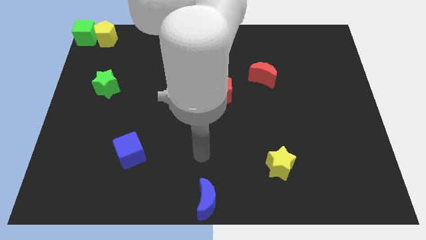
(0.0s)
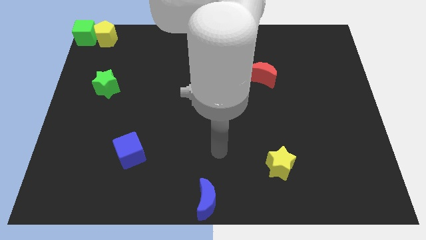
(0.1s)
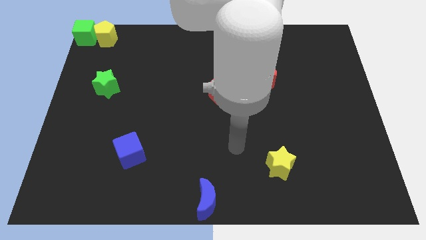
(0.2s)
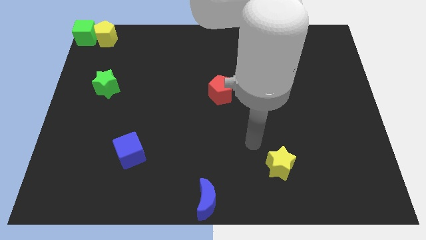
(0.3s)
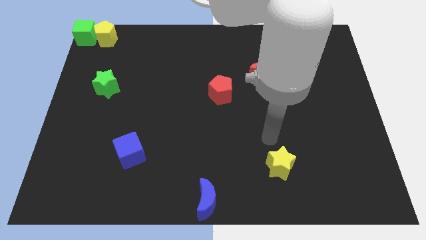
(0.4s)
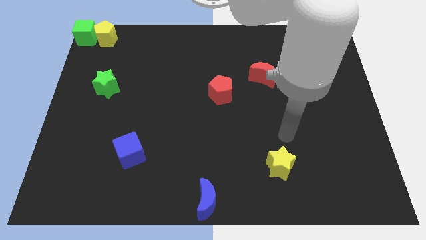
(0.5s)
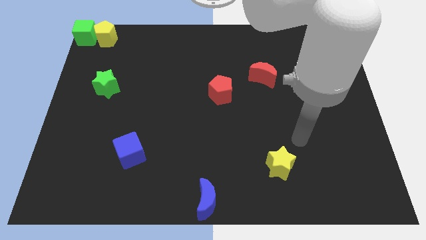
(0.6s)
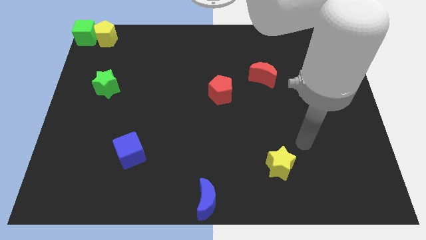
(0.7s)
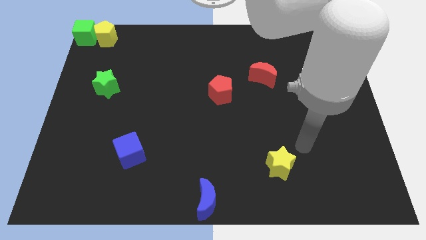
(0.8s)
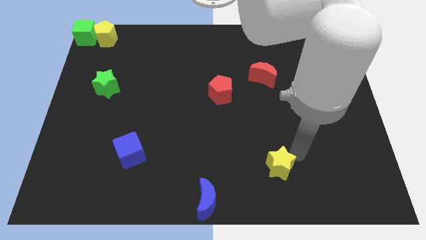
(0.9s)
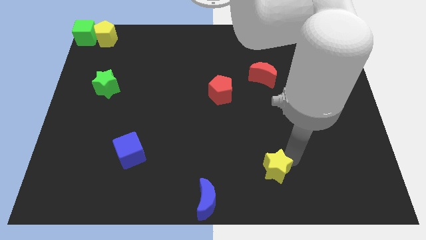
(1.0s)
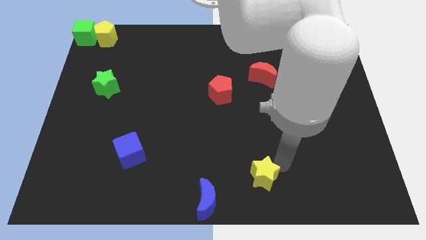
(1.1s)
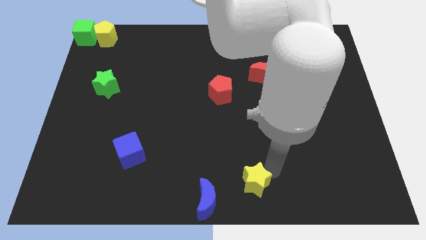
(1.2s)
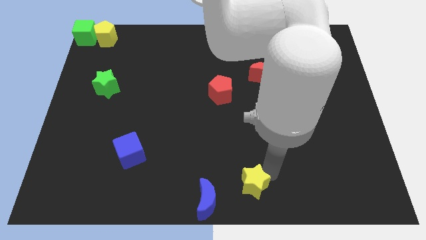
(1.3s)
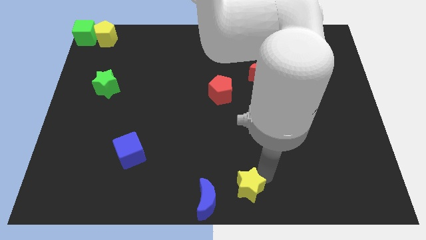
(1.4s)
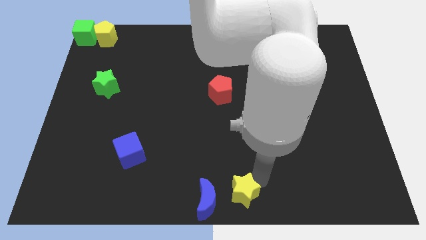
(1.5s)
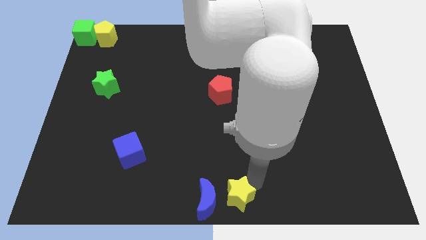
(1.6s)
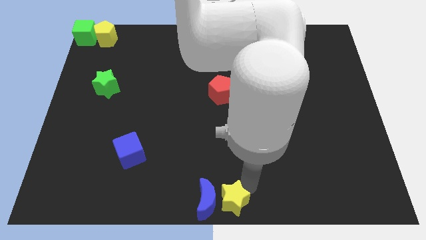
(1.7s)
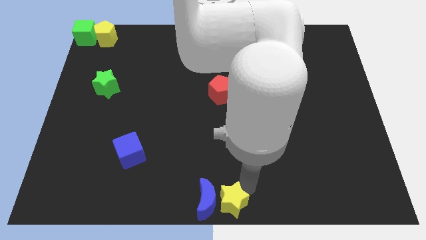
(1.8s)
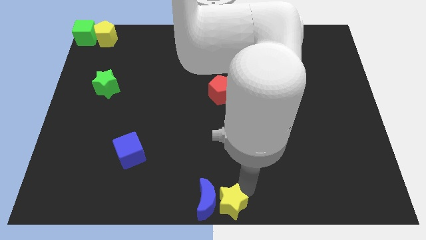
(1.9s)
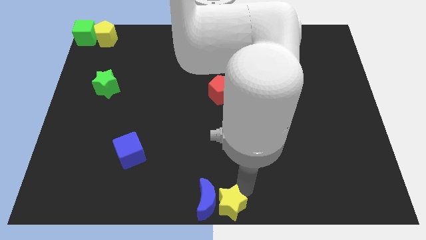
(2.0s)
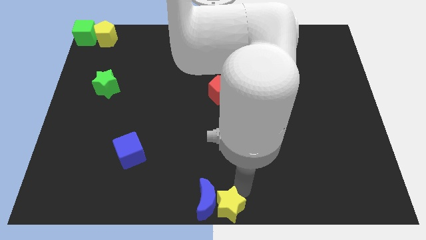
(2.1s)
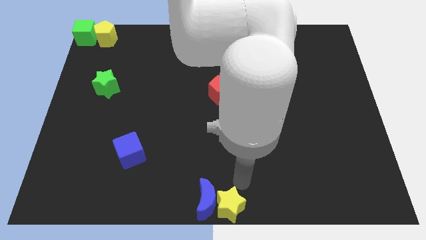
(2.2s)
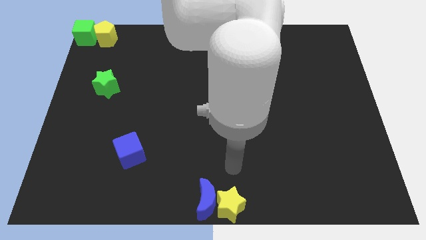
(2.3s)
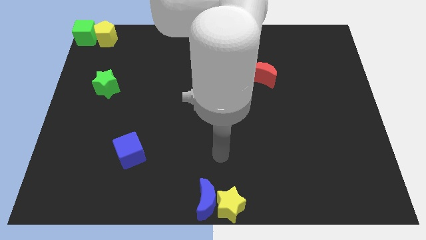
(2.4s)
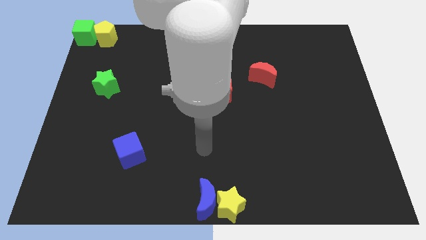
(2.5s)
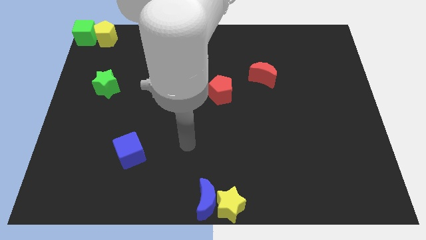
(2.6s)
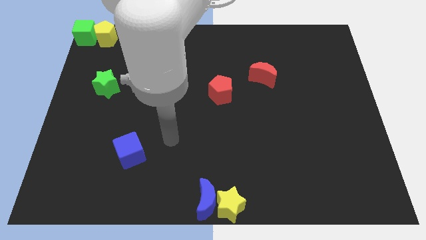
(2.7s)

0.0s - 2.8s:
move the yellow star to the right of blue moon

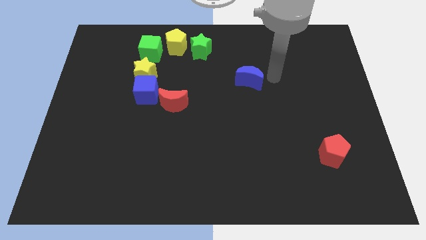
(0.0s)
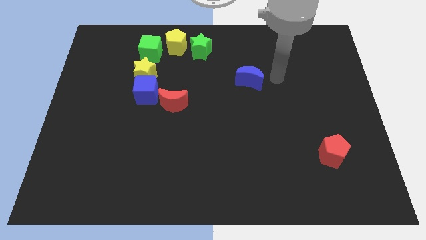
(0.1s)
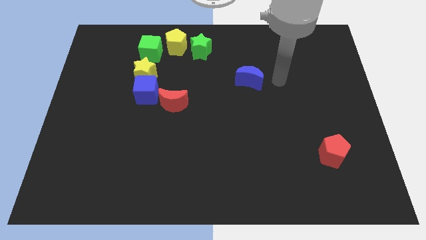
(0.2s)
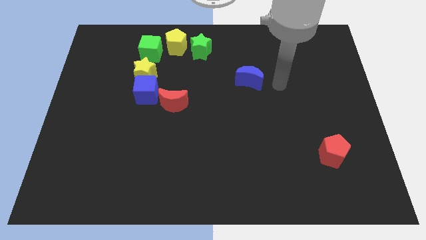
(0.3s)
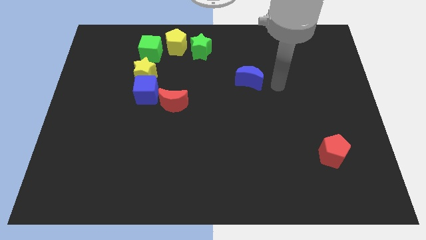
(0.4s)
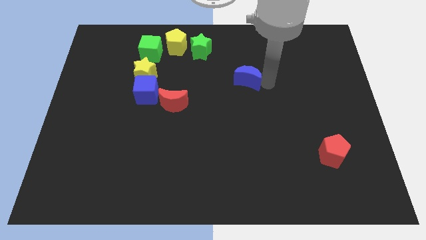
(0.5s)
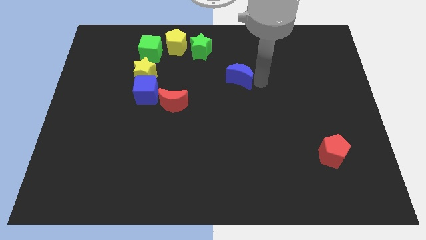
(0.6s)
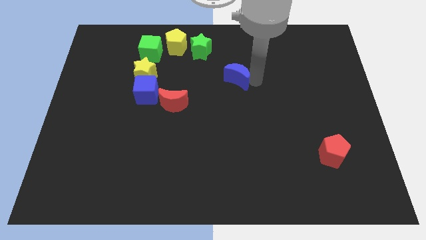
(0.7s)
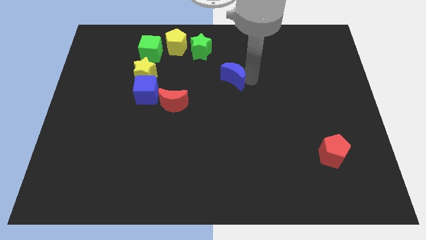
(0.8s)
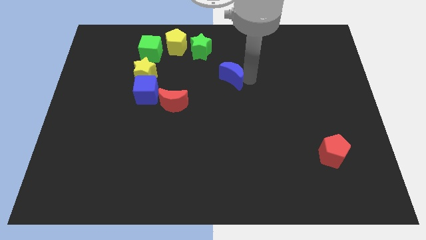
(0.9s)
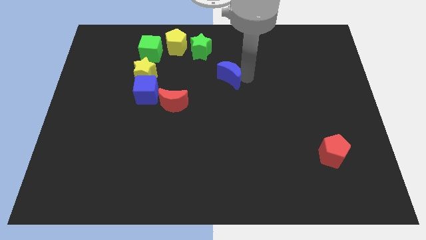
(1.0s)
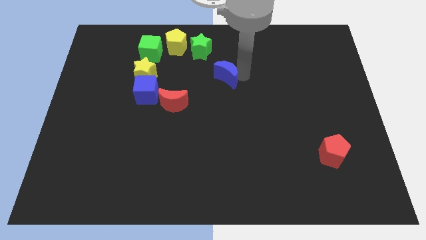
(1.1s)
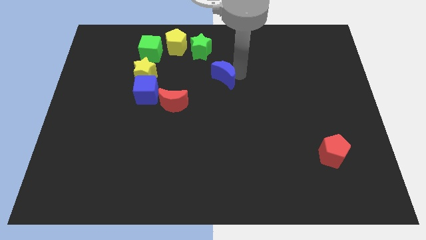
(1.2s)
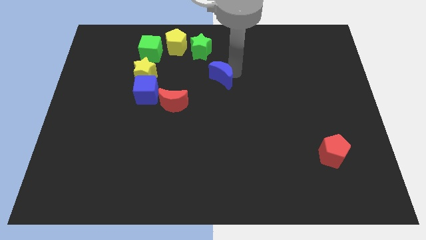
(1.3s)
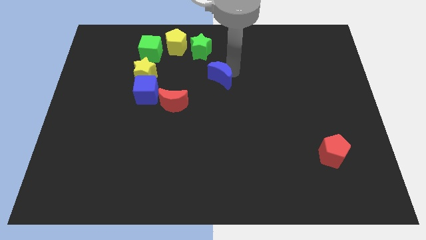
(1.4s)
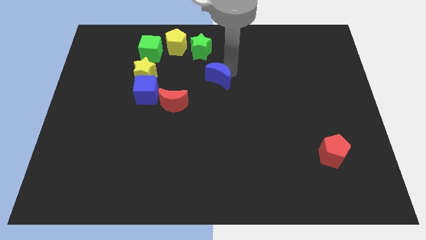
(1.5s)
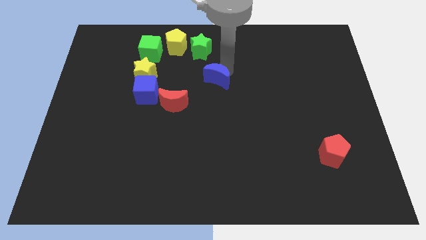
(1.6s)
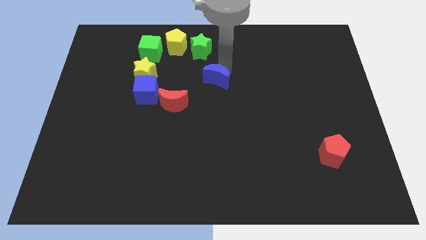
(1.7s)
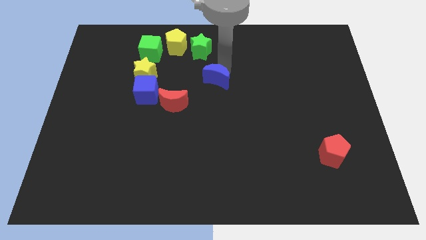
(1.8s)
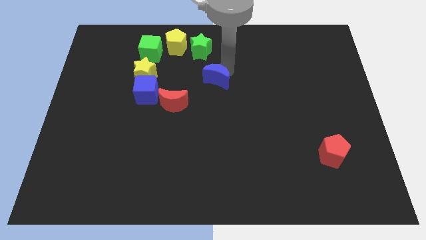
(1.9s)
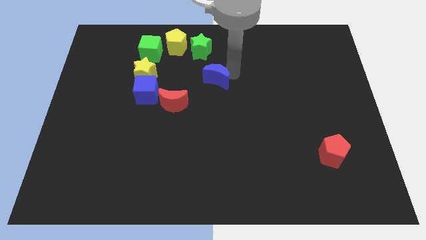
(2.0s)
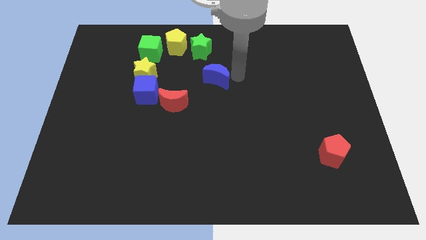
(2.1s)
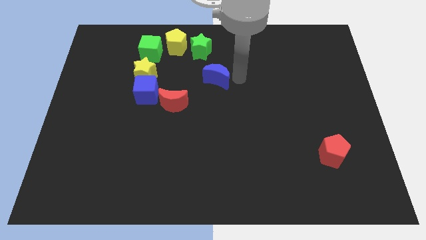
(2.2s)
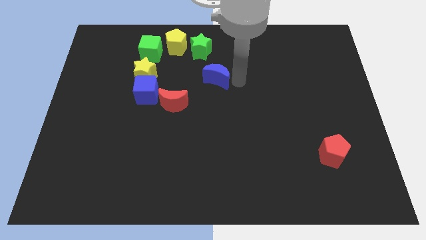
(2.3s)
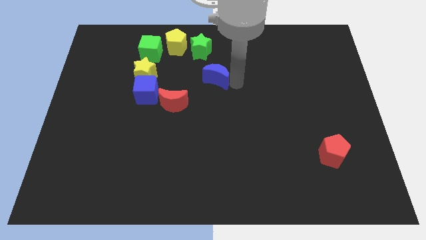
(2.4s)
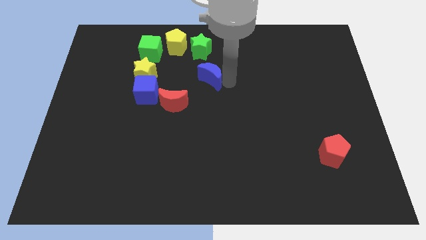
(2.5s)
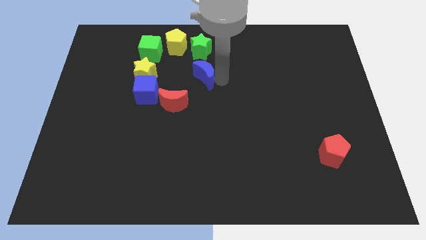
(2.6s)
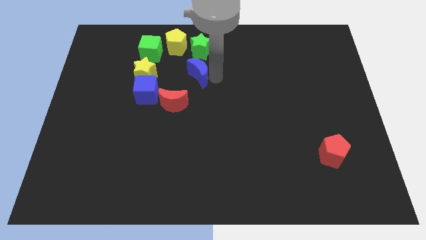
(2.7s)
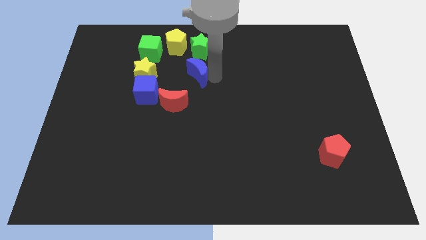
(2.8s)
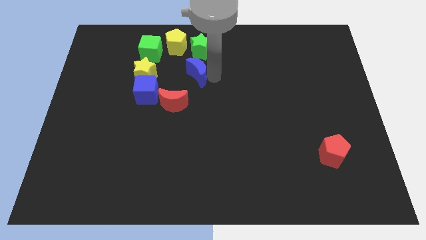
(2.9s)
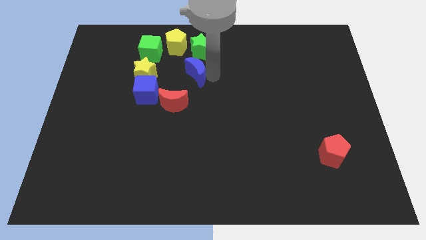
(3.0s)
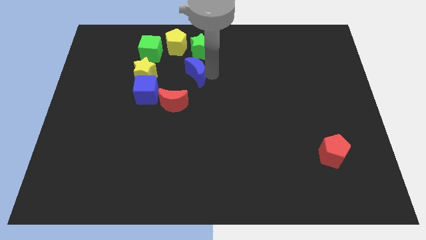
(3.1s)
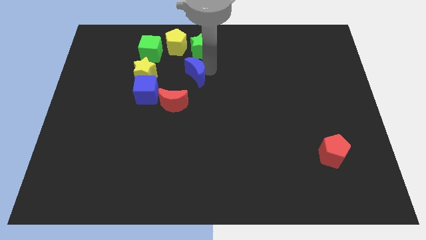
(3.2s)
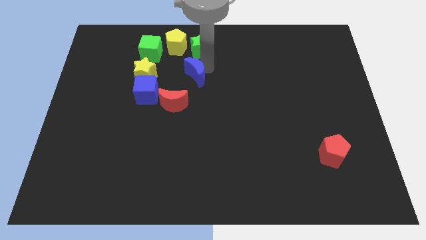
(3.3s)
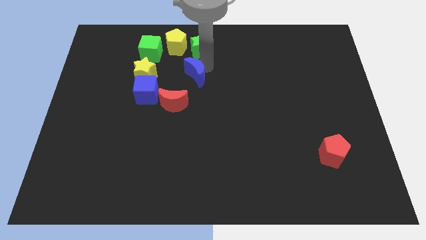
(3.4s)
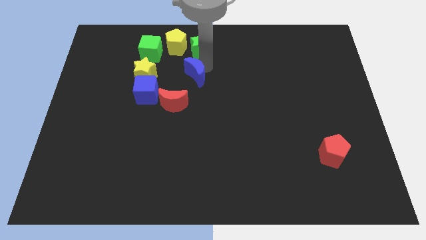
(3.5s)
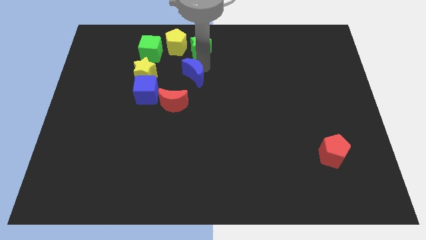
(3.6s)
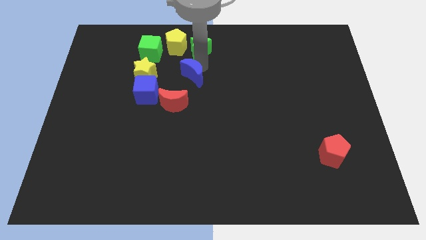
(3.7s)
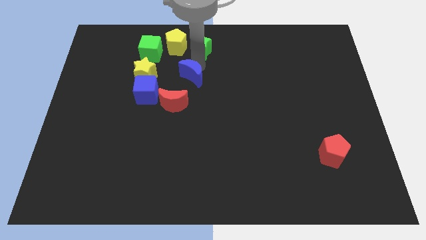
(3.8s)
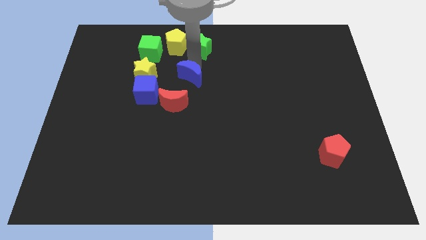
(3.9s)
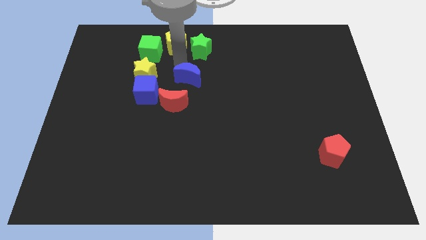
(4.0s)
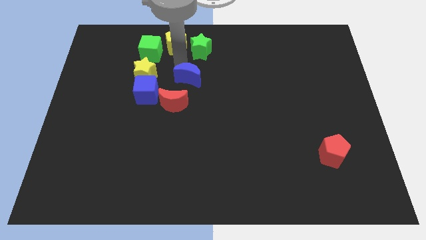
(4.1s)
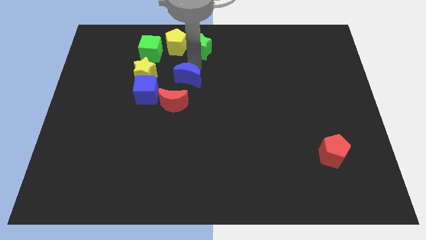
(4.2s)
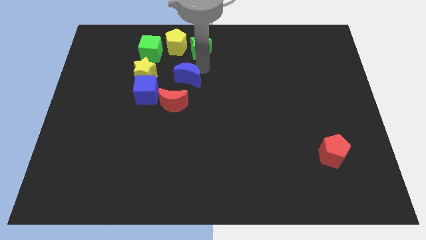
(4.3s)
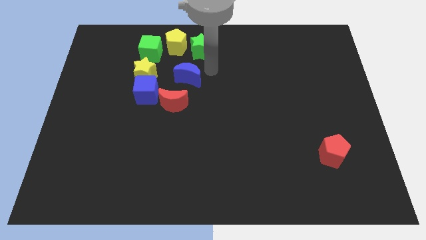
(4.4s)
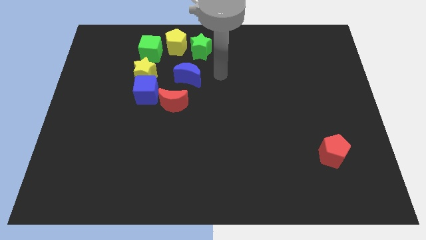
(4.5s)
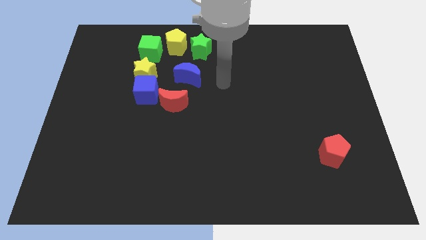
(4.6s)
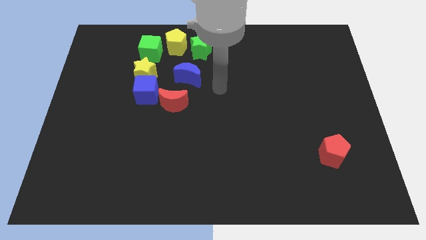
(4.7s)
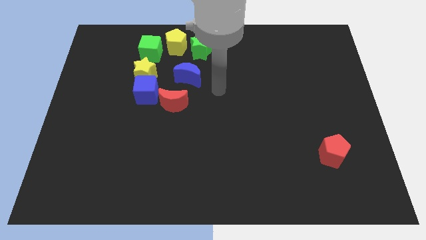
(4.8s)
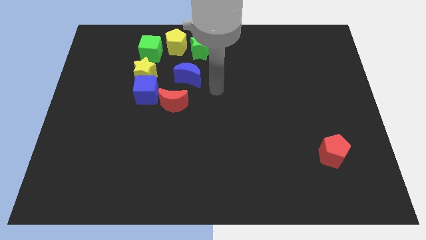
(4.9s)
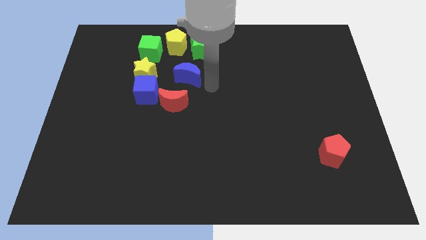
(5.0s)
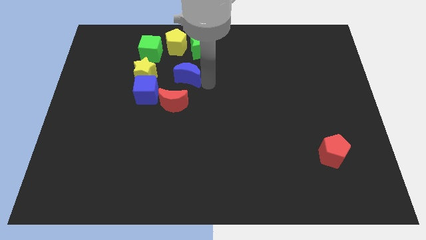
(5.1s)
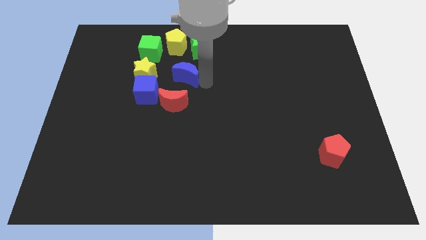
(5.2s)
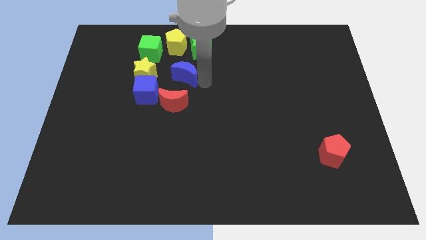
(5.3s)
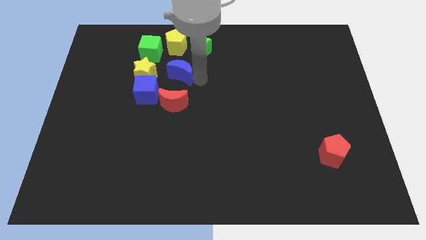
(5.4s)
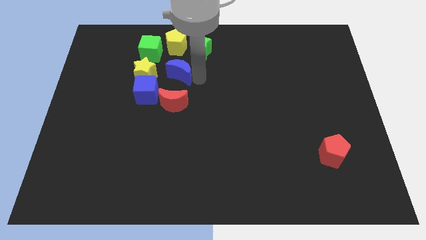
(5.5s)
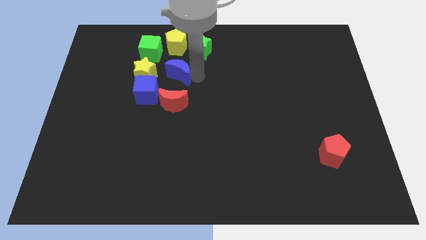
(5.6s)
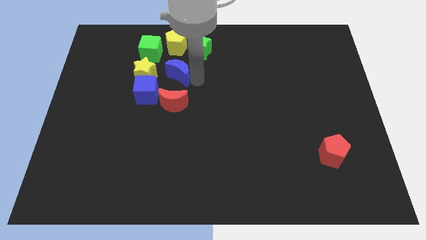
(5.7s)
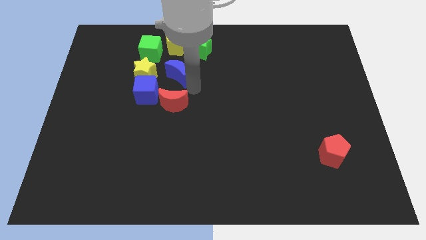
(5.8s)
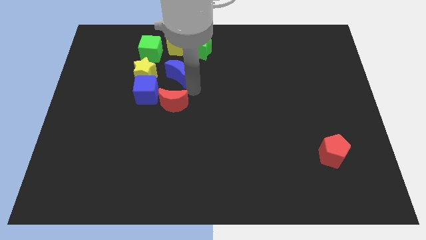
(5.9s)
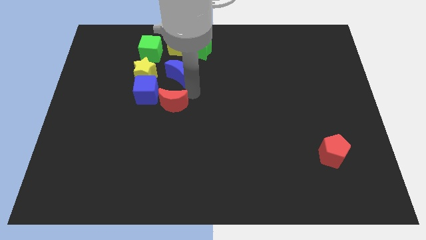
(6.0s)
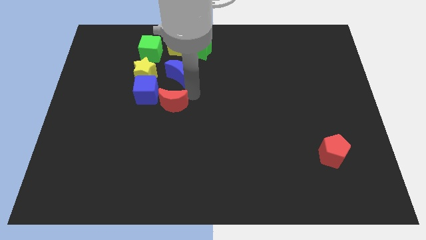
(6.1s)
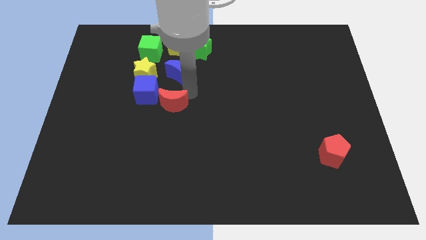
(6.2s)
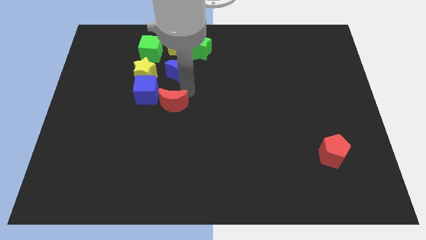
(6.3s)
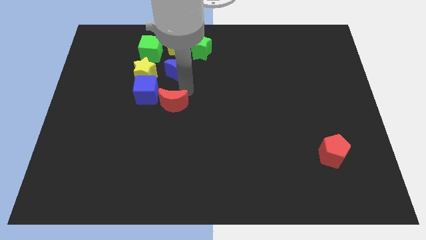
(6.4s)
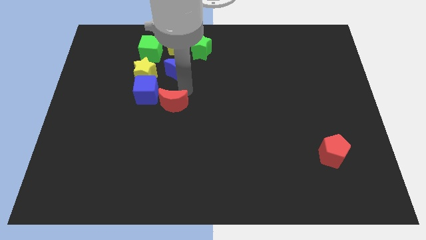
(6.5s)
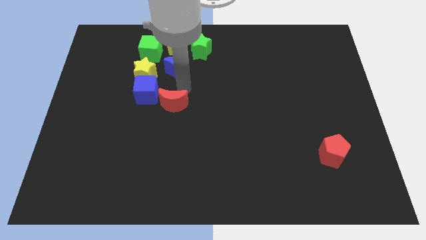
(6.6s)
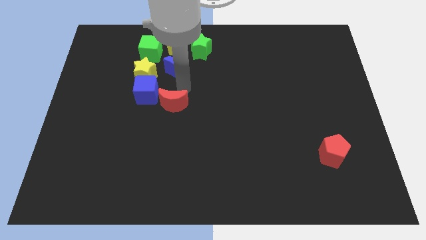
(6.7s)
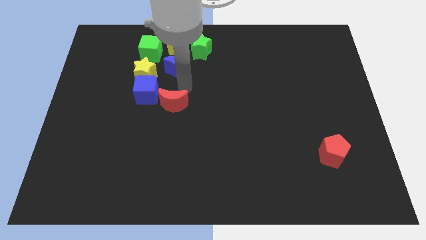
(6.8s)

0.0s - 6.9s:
move the blue crescent to the right of the yellow star
